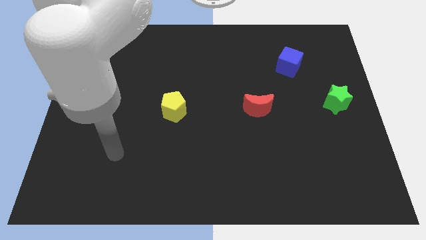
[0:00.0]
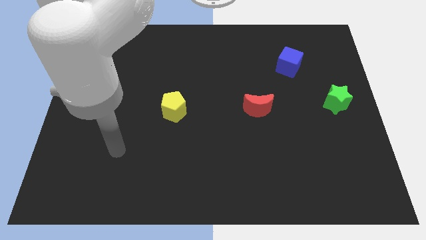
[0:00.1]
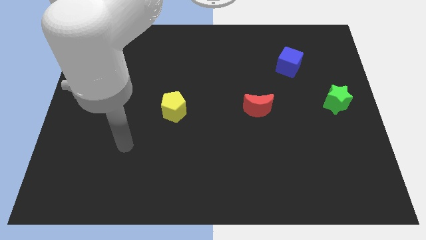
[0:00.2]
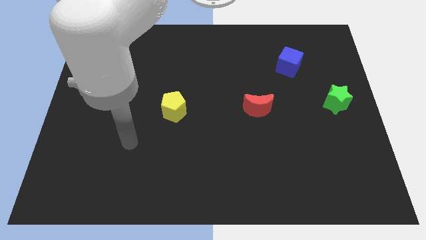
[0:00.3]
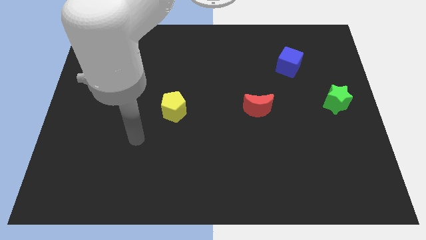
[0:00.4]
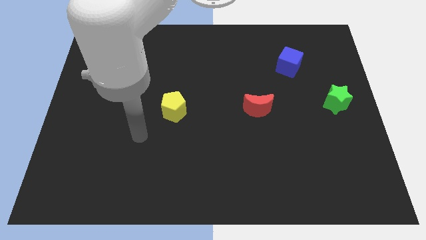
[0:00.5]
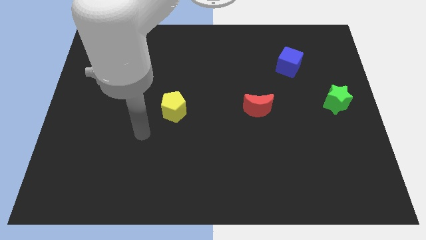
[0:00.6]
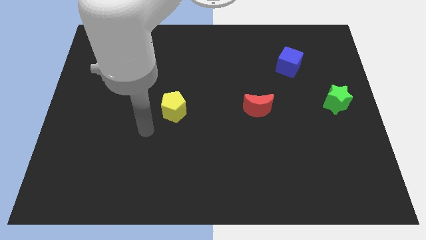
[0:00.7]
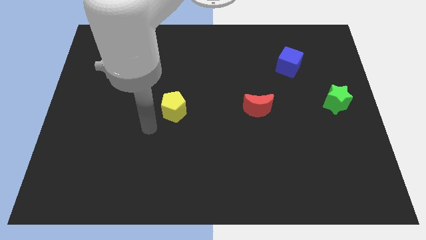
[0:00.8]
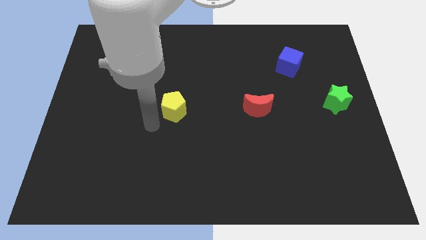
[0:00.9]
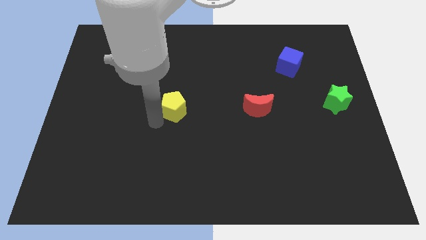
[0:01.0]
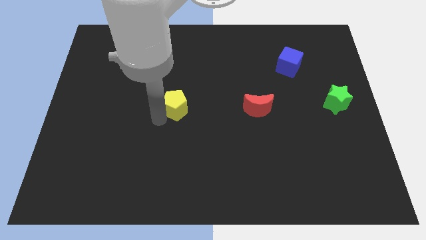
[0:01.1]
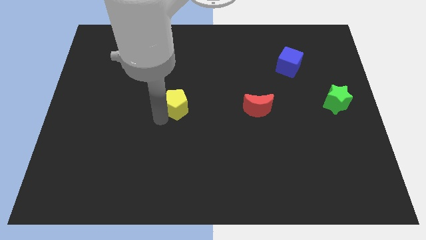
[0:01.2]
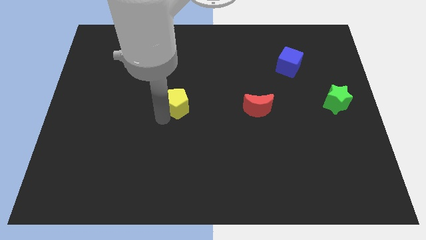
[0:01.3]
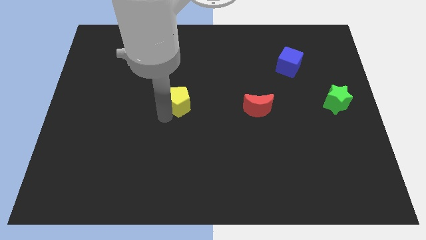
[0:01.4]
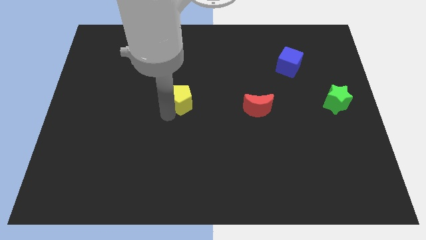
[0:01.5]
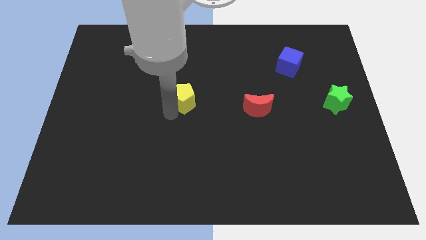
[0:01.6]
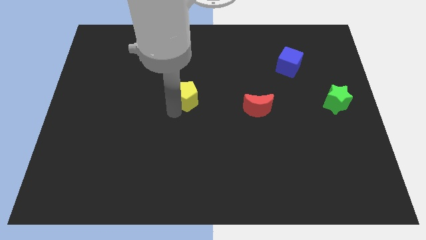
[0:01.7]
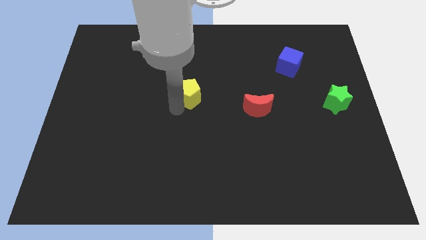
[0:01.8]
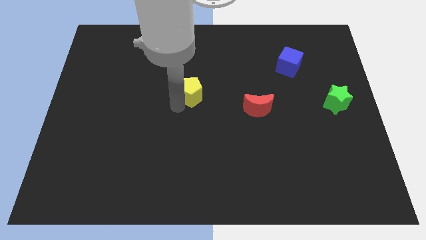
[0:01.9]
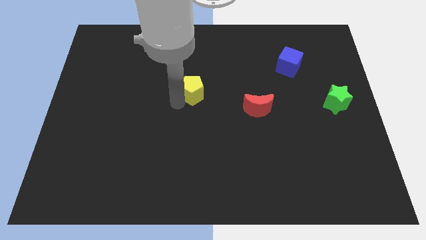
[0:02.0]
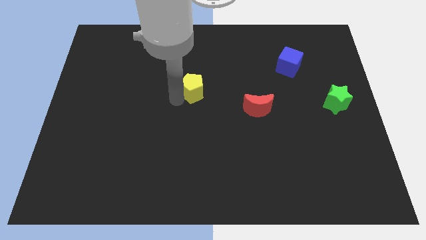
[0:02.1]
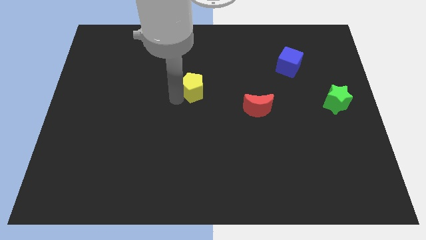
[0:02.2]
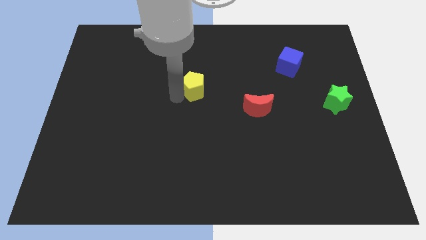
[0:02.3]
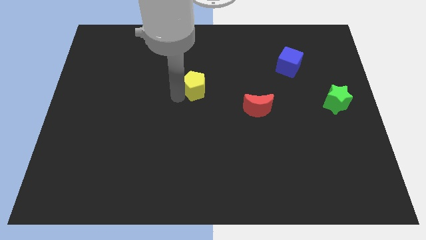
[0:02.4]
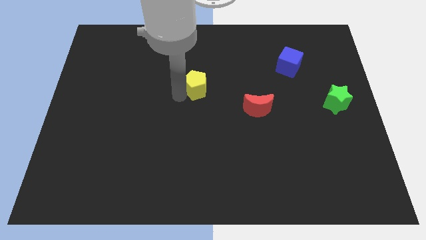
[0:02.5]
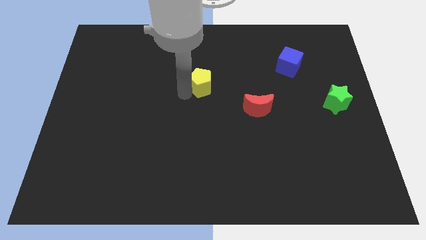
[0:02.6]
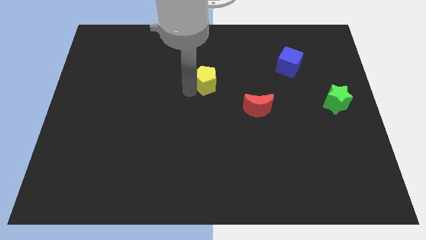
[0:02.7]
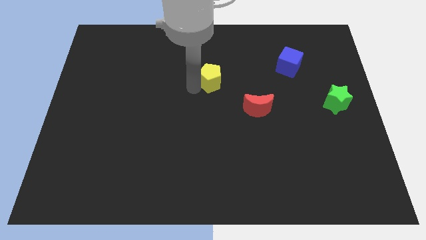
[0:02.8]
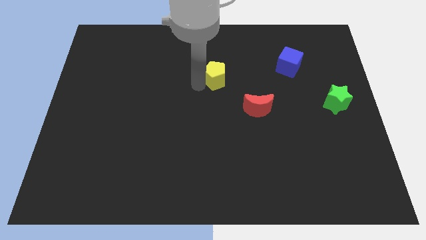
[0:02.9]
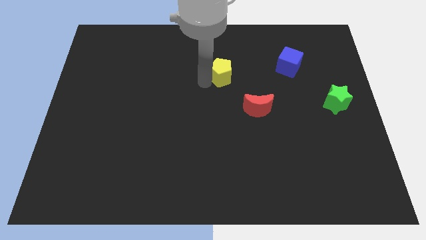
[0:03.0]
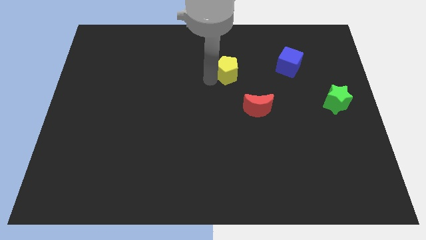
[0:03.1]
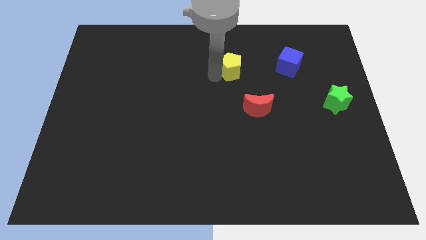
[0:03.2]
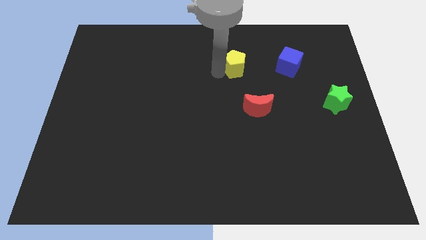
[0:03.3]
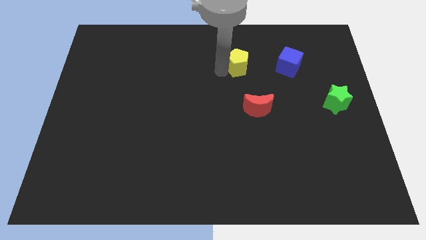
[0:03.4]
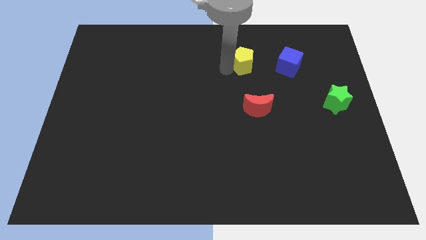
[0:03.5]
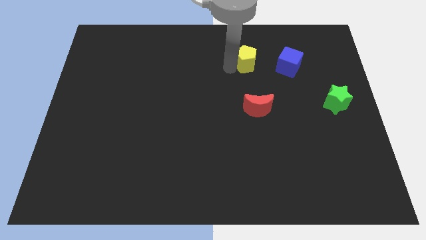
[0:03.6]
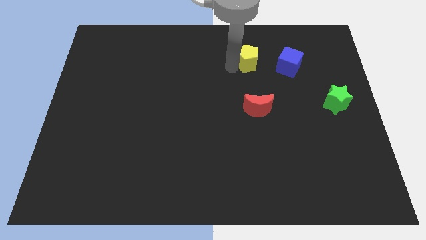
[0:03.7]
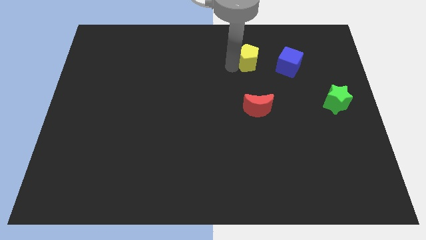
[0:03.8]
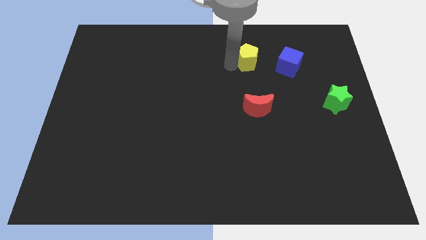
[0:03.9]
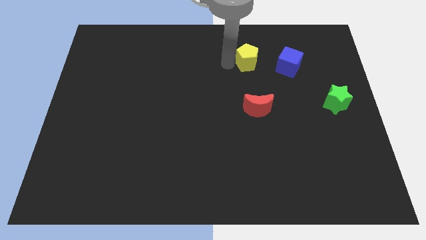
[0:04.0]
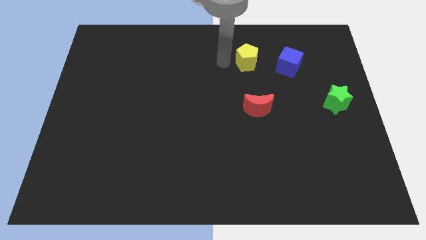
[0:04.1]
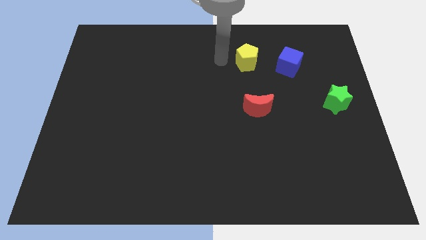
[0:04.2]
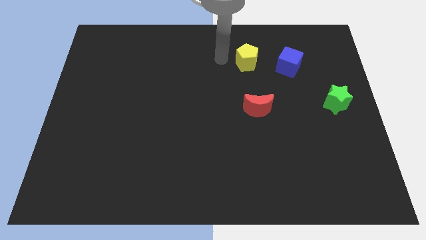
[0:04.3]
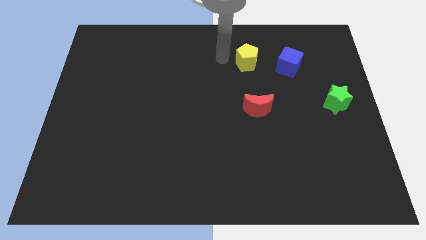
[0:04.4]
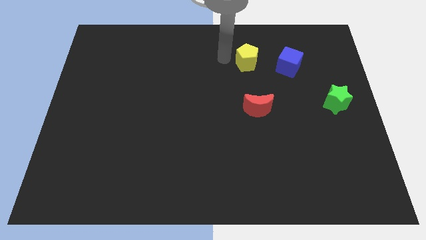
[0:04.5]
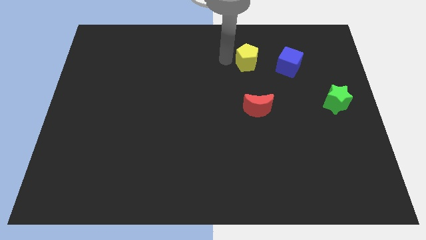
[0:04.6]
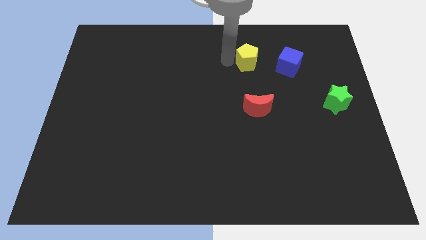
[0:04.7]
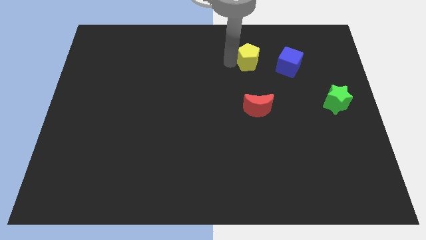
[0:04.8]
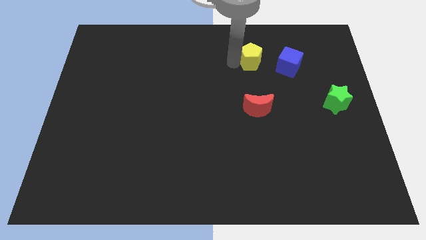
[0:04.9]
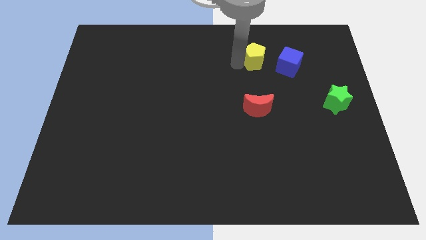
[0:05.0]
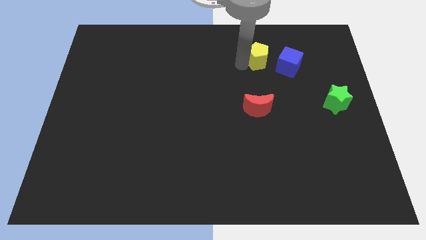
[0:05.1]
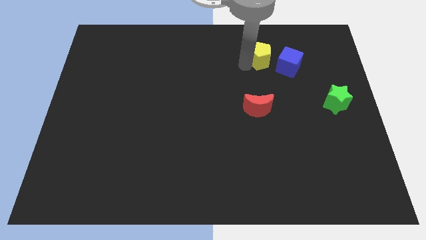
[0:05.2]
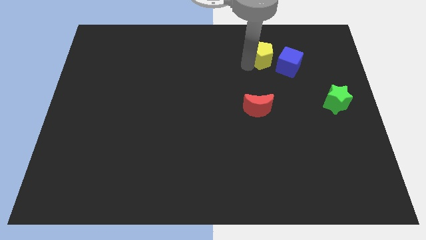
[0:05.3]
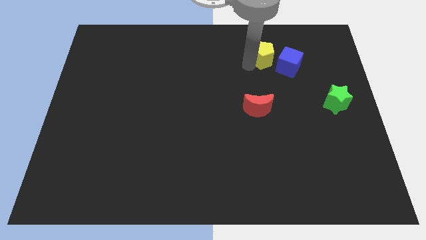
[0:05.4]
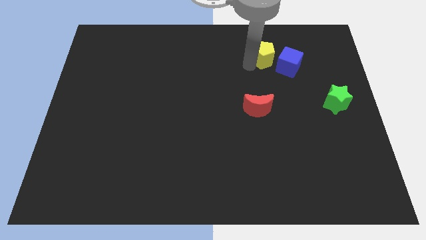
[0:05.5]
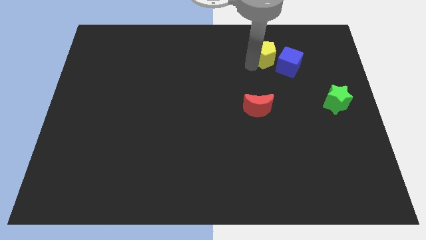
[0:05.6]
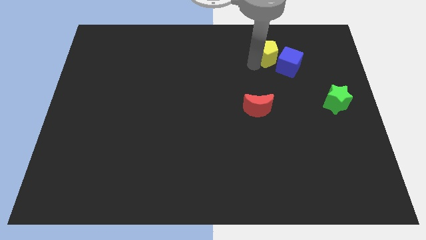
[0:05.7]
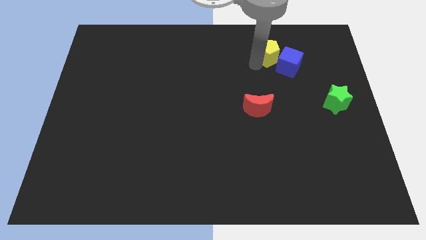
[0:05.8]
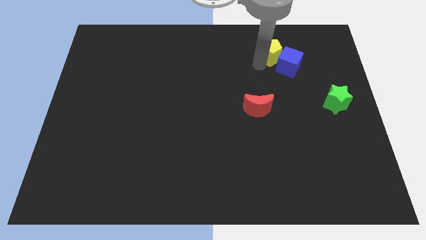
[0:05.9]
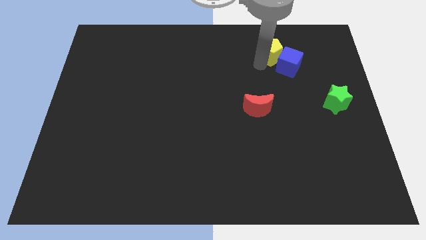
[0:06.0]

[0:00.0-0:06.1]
move the yellow pentagon to the cube

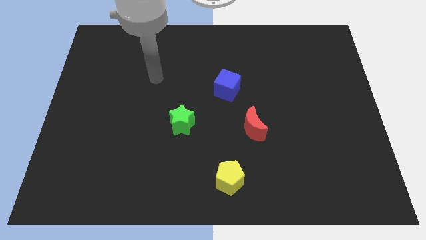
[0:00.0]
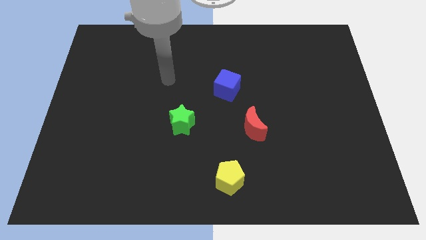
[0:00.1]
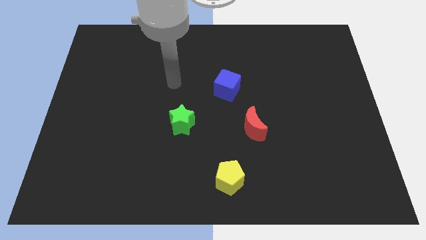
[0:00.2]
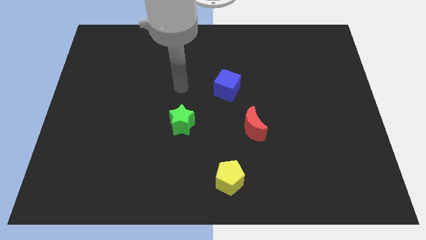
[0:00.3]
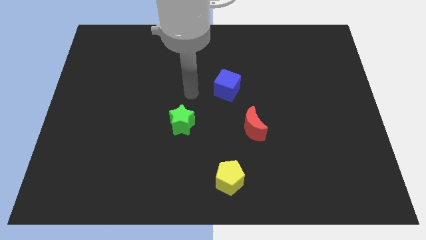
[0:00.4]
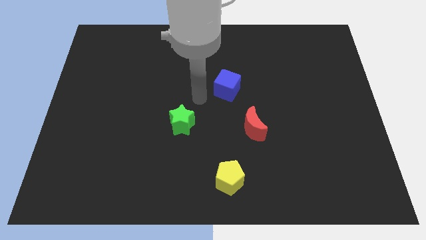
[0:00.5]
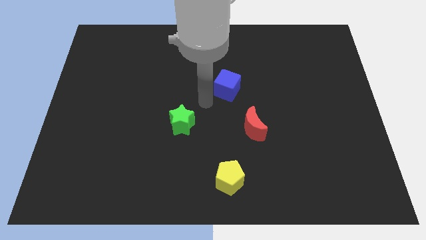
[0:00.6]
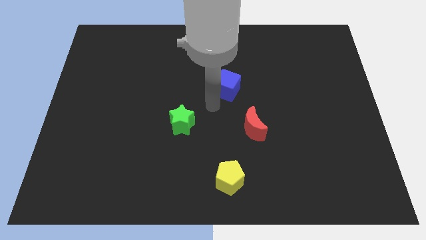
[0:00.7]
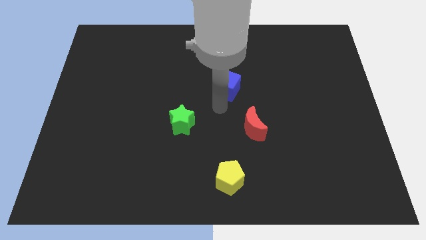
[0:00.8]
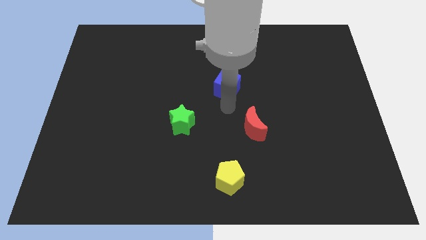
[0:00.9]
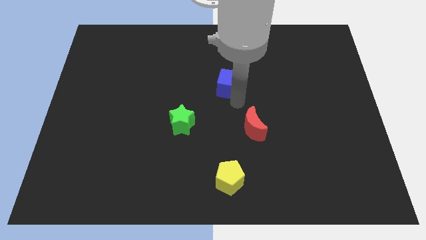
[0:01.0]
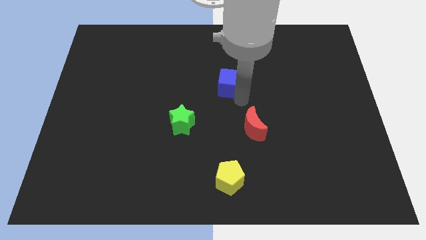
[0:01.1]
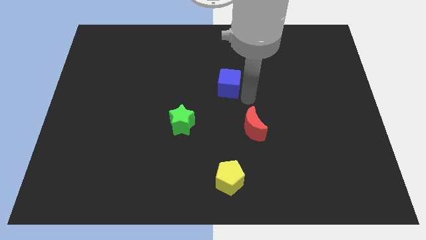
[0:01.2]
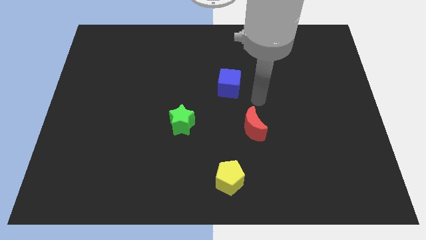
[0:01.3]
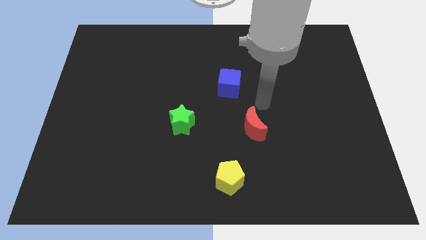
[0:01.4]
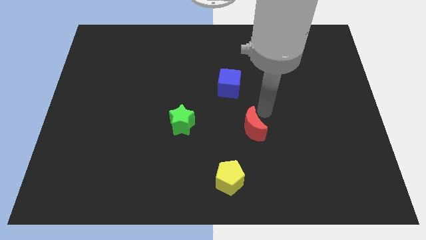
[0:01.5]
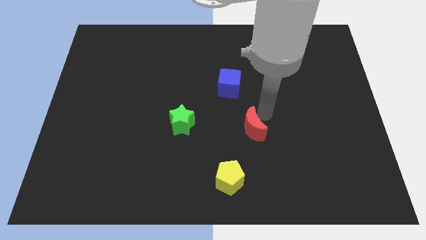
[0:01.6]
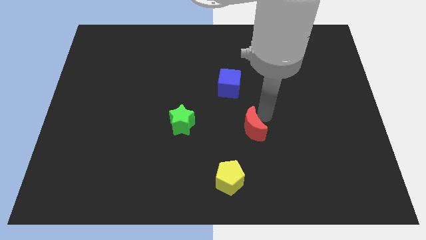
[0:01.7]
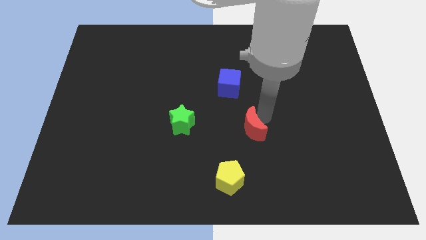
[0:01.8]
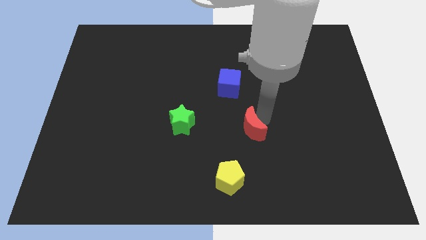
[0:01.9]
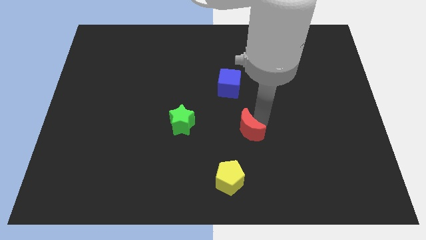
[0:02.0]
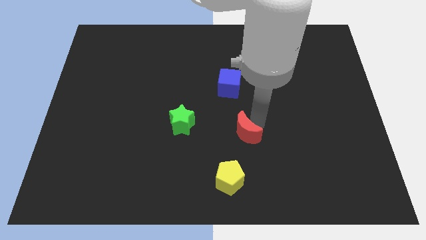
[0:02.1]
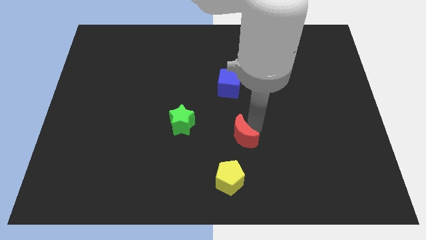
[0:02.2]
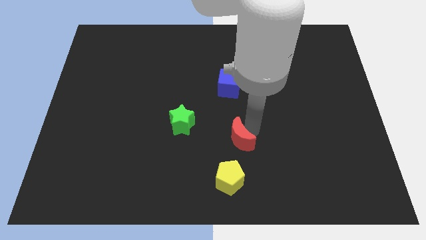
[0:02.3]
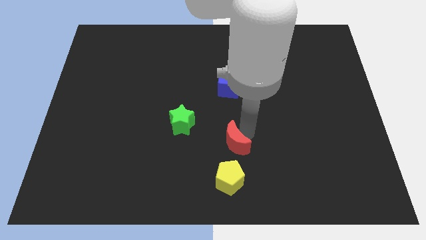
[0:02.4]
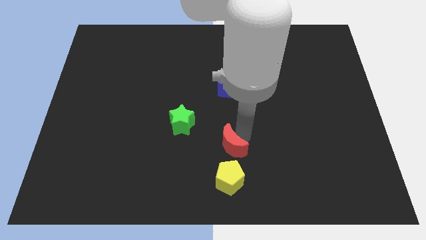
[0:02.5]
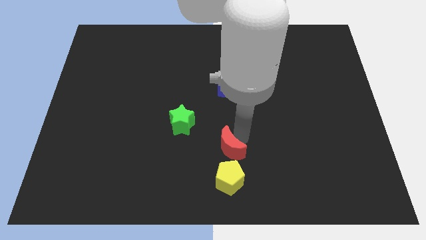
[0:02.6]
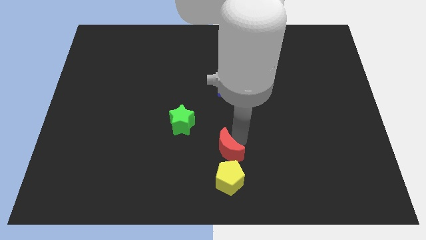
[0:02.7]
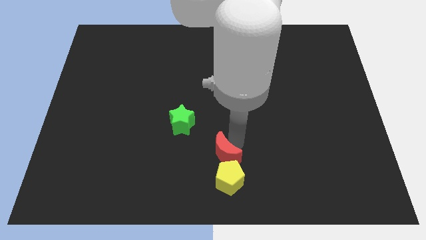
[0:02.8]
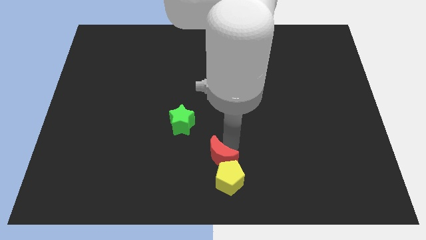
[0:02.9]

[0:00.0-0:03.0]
move the red moon close to the yellow block
